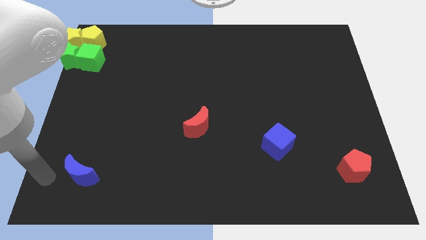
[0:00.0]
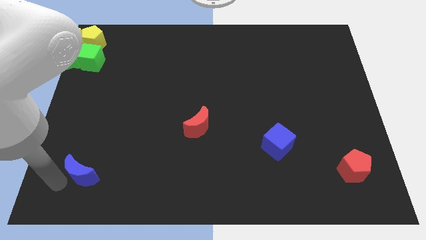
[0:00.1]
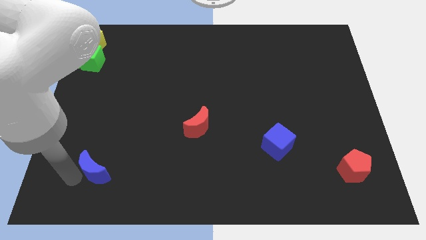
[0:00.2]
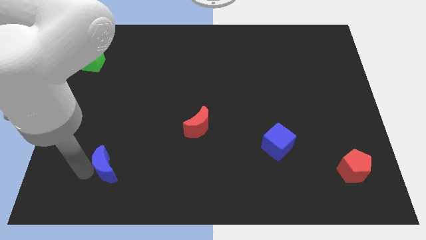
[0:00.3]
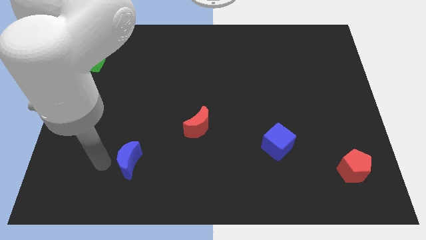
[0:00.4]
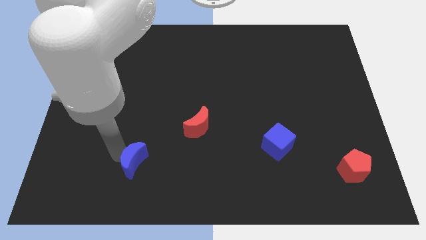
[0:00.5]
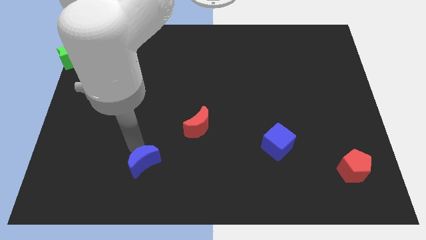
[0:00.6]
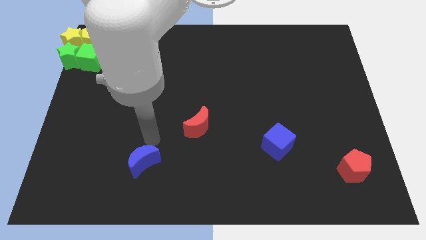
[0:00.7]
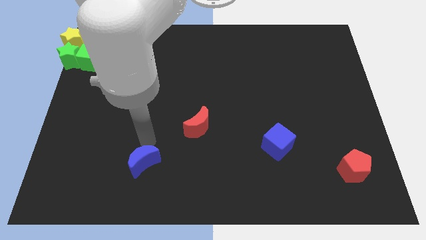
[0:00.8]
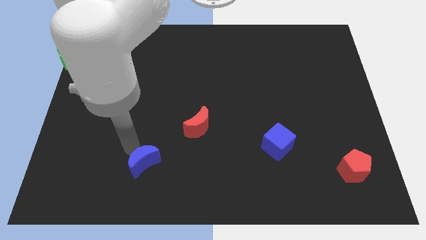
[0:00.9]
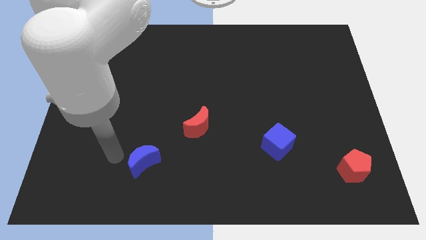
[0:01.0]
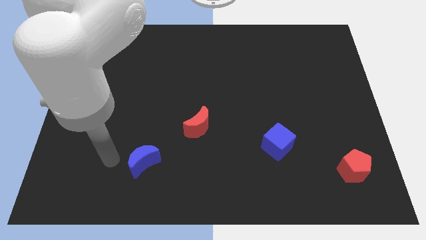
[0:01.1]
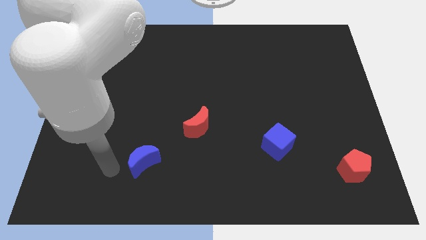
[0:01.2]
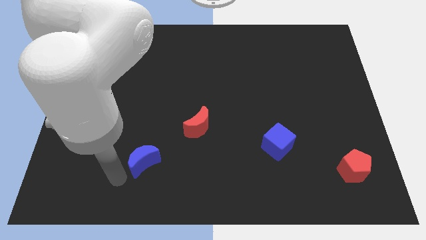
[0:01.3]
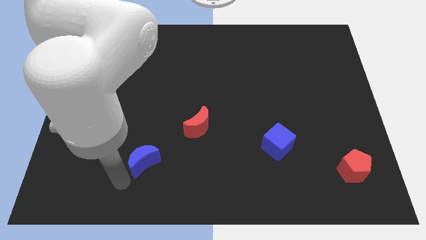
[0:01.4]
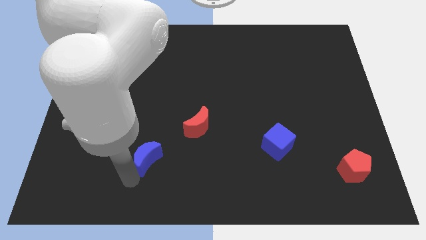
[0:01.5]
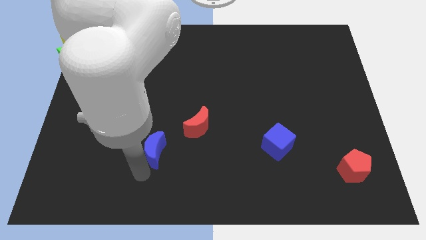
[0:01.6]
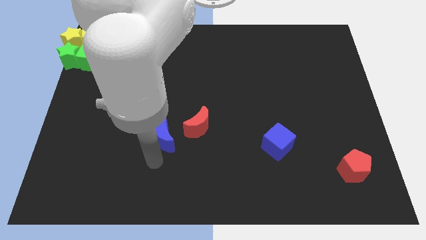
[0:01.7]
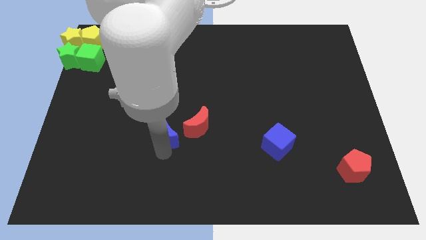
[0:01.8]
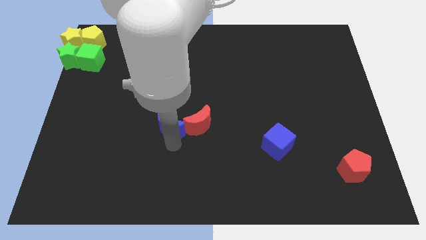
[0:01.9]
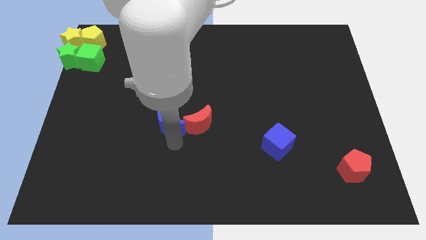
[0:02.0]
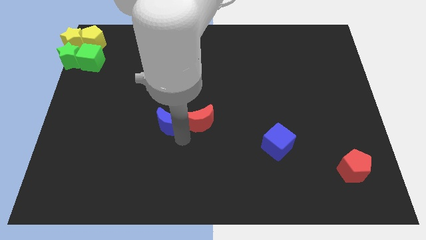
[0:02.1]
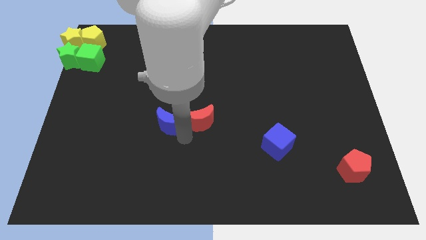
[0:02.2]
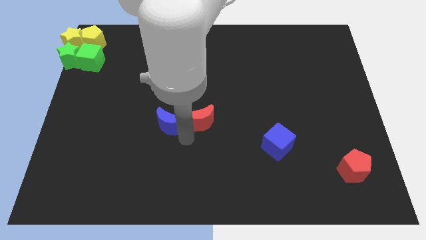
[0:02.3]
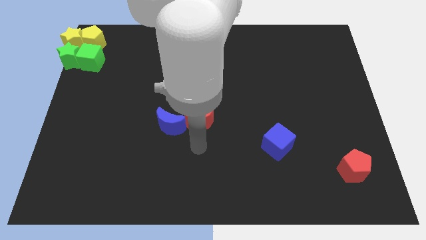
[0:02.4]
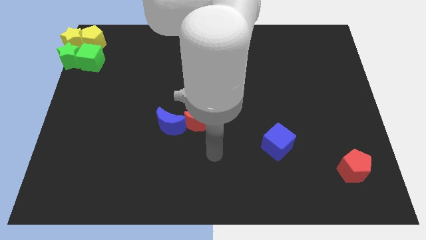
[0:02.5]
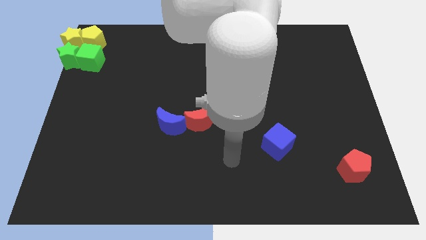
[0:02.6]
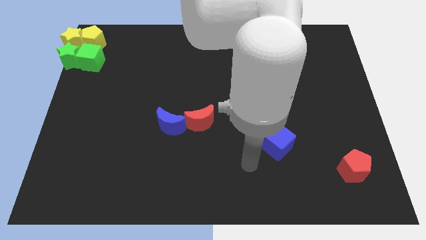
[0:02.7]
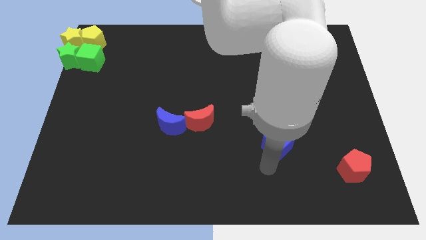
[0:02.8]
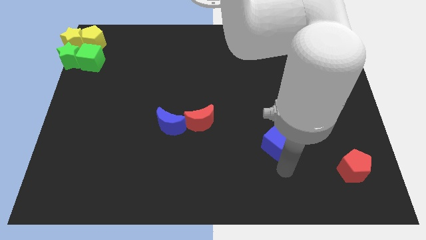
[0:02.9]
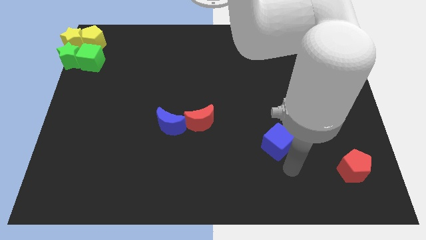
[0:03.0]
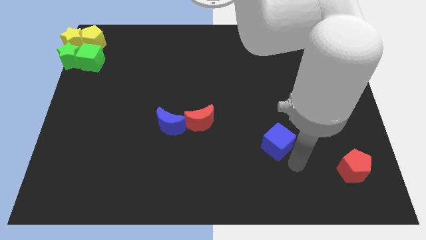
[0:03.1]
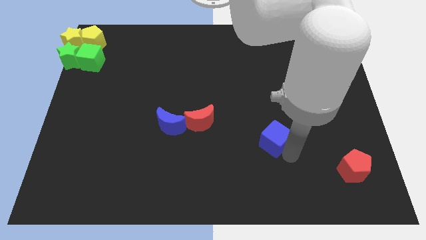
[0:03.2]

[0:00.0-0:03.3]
place the blue moon to the left of the red moon

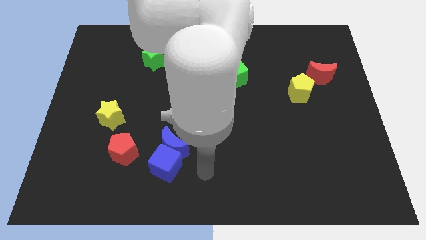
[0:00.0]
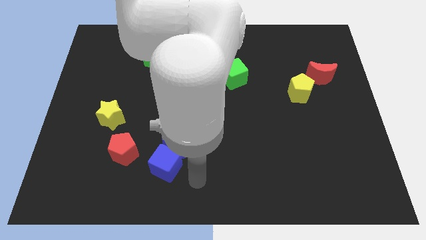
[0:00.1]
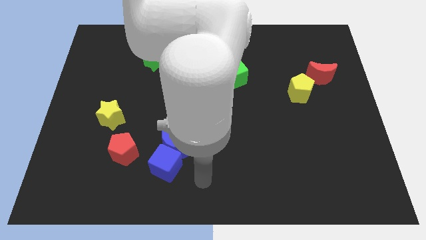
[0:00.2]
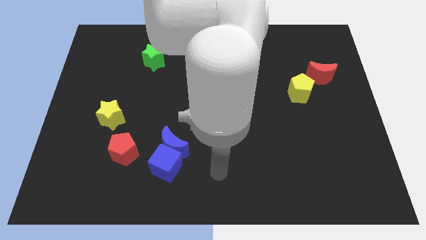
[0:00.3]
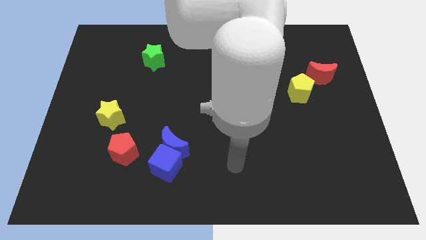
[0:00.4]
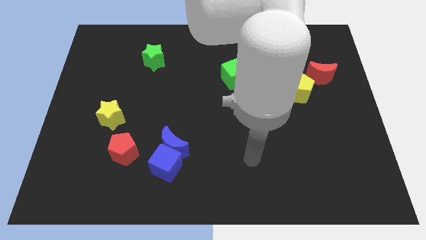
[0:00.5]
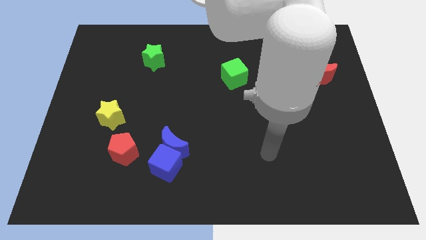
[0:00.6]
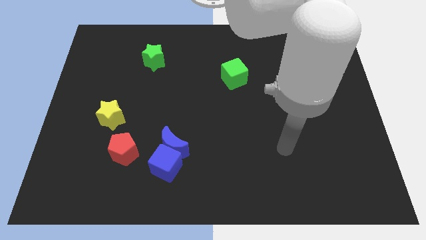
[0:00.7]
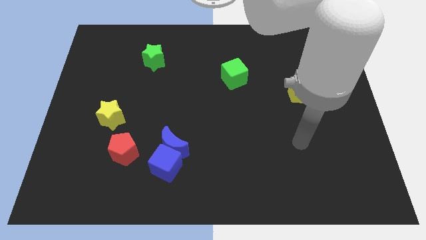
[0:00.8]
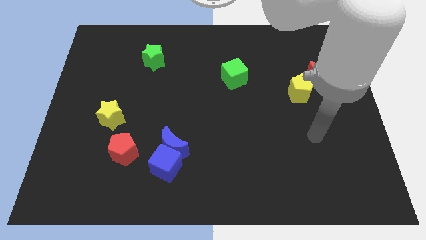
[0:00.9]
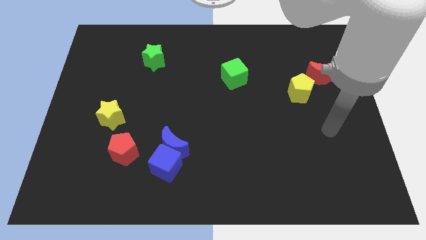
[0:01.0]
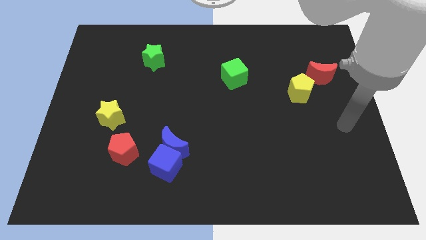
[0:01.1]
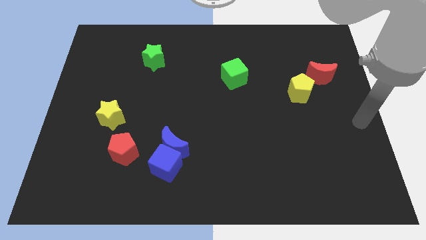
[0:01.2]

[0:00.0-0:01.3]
move away from blue cube to the center right of the board

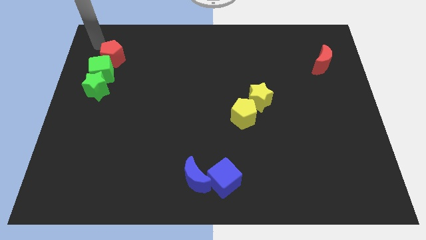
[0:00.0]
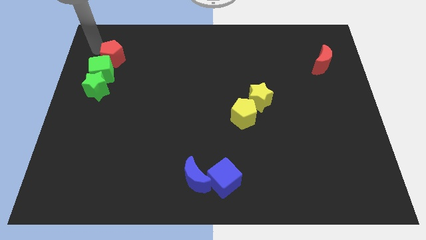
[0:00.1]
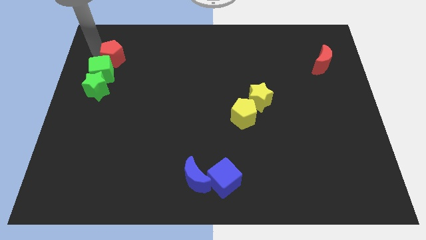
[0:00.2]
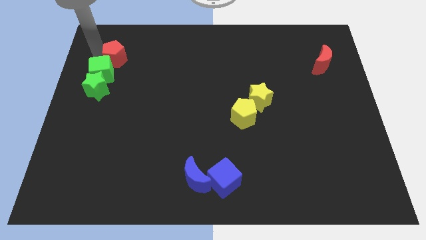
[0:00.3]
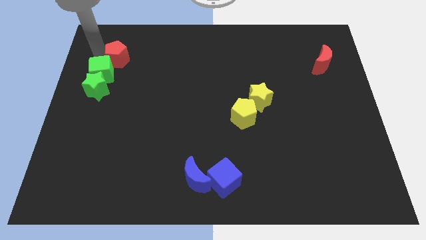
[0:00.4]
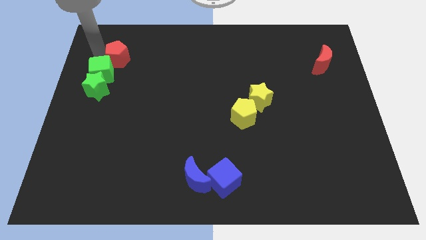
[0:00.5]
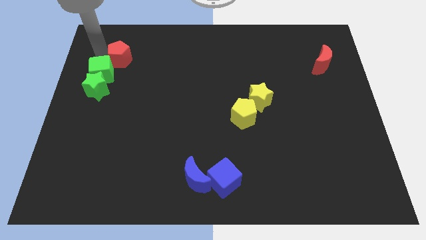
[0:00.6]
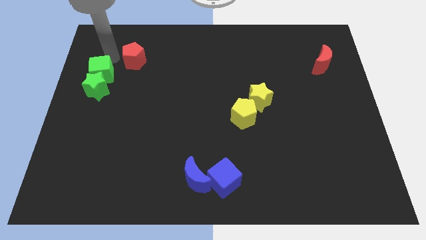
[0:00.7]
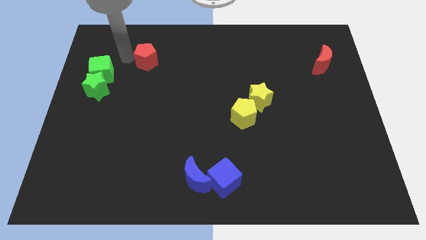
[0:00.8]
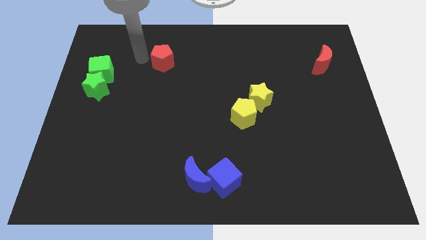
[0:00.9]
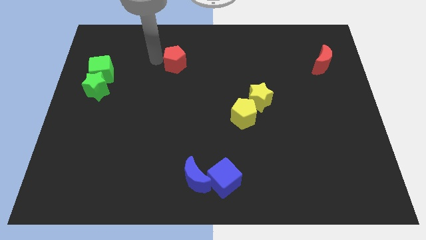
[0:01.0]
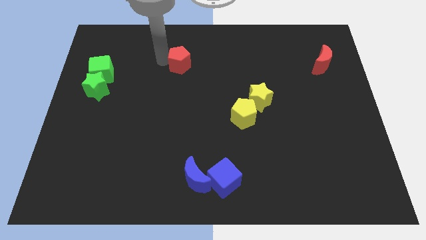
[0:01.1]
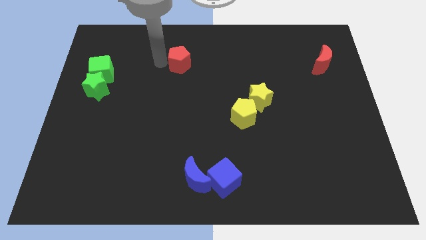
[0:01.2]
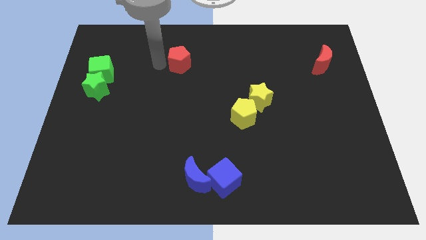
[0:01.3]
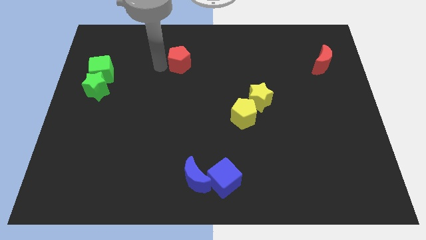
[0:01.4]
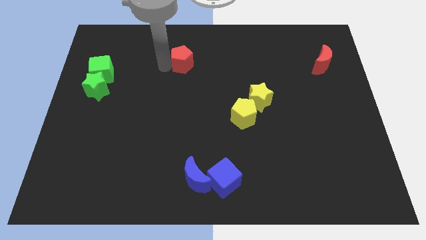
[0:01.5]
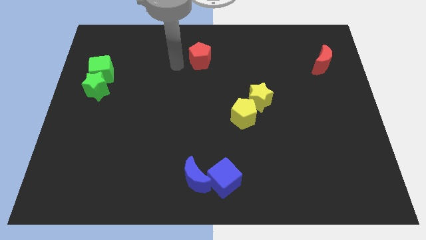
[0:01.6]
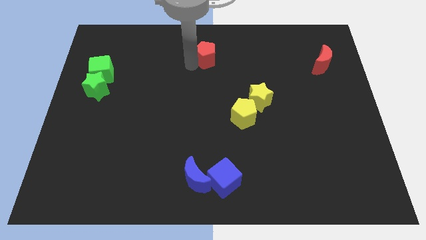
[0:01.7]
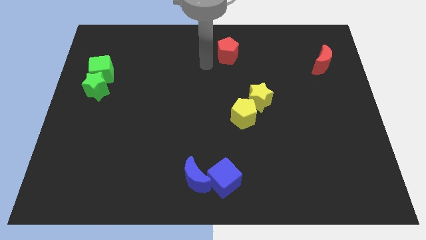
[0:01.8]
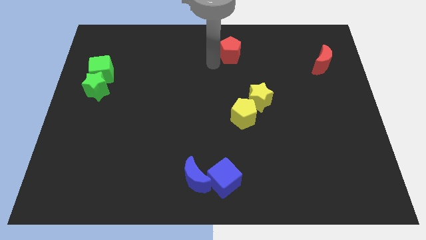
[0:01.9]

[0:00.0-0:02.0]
move the red pentagon away from the green cube

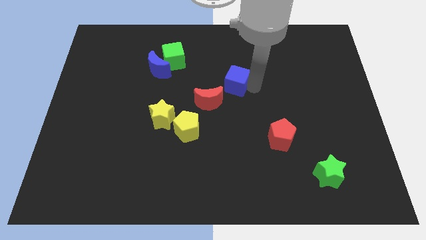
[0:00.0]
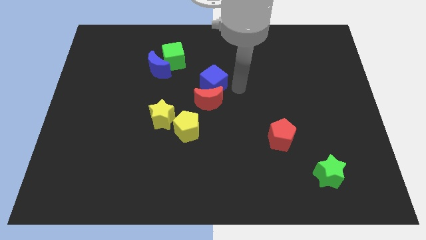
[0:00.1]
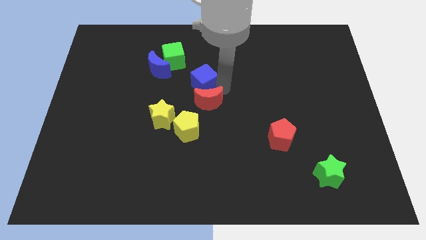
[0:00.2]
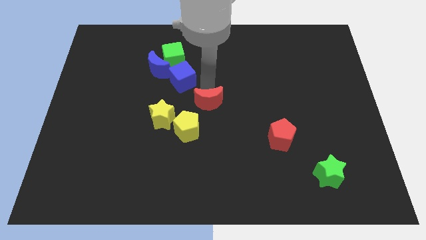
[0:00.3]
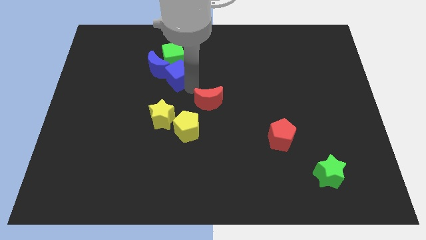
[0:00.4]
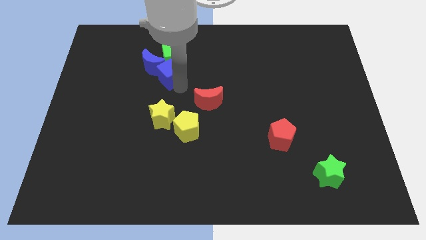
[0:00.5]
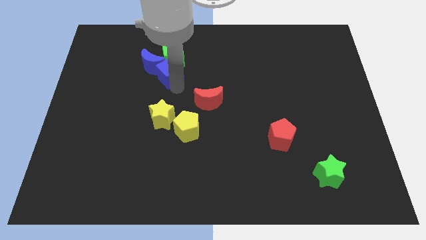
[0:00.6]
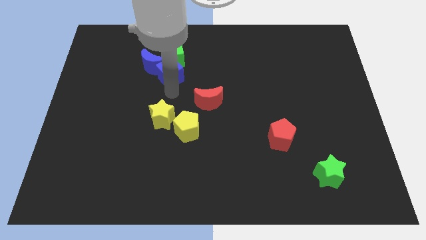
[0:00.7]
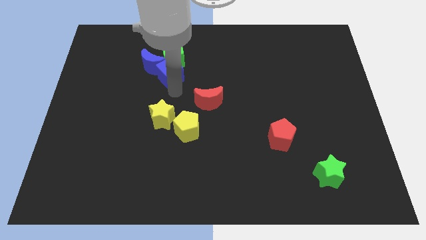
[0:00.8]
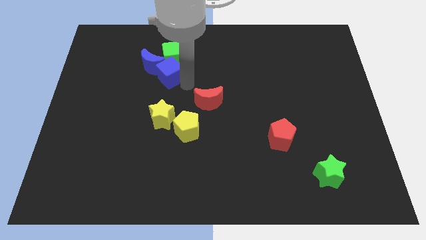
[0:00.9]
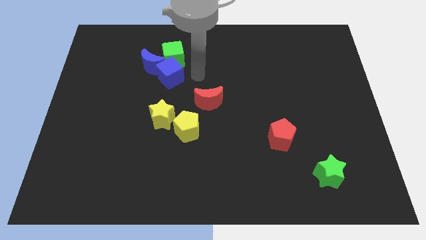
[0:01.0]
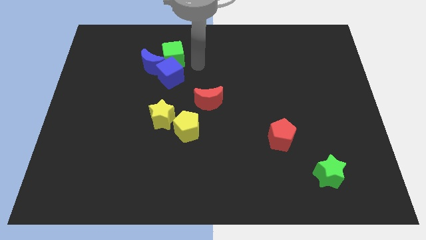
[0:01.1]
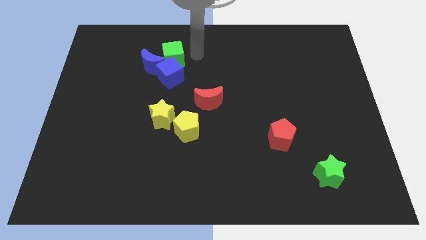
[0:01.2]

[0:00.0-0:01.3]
place the blue cube to the bottom of the green cube

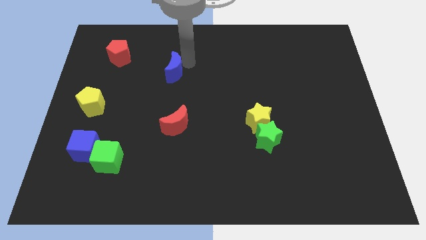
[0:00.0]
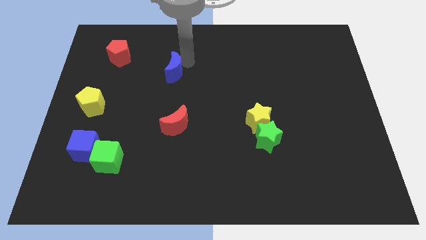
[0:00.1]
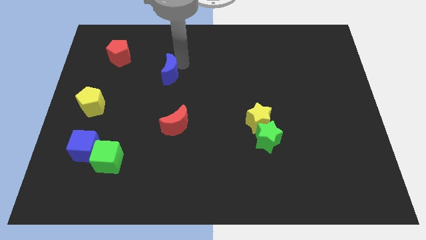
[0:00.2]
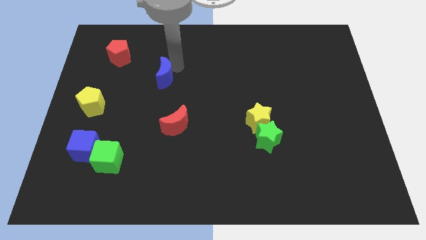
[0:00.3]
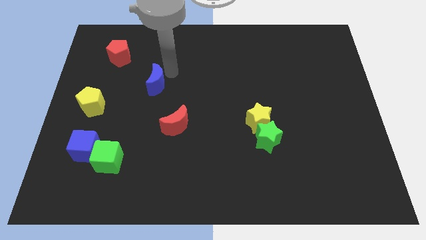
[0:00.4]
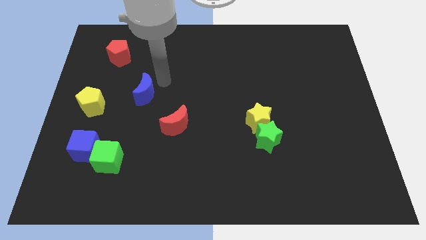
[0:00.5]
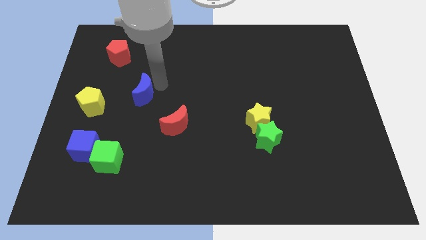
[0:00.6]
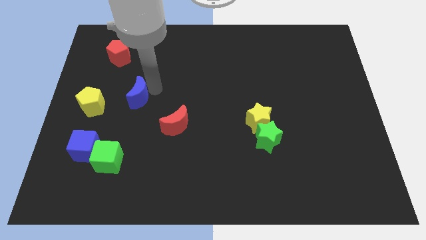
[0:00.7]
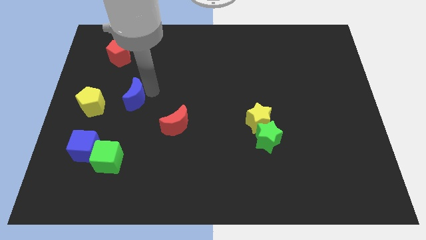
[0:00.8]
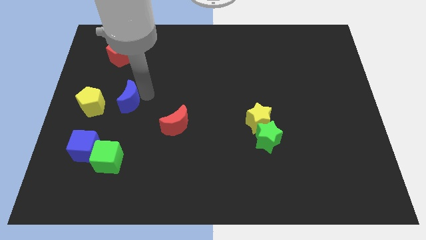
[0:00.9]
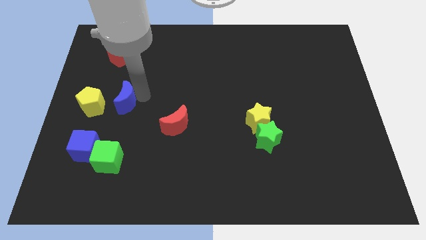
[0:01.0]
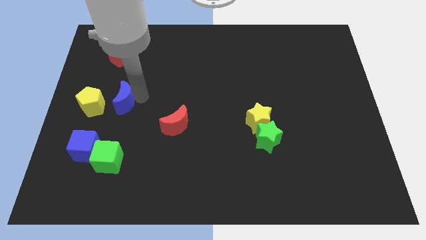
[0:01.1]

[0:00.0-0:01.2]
put blue moon diagonally top left to the red moon
